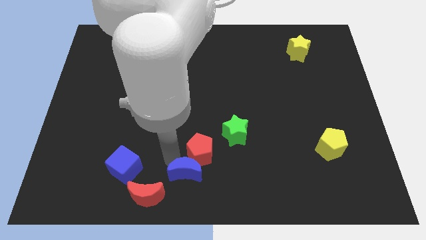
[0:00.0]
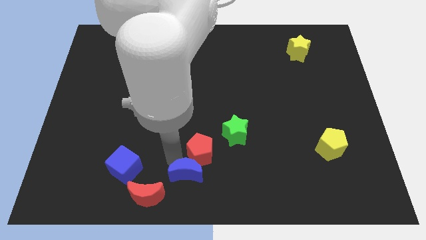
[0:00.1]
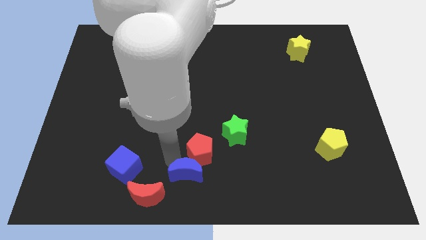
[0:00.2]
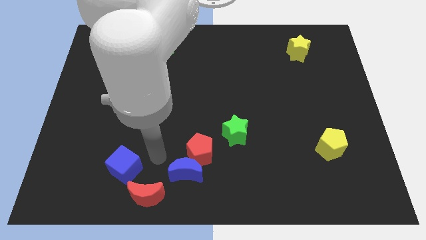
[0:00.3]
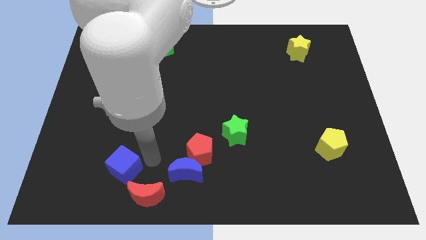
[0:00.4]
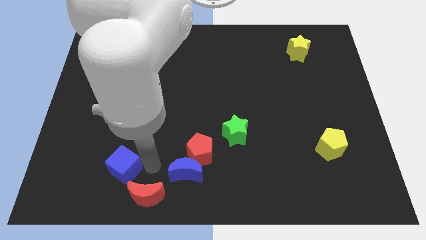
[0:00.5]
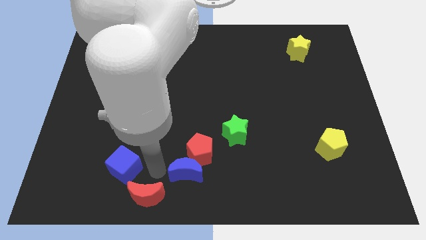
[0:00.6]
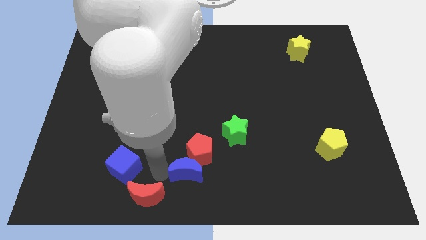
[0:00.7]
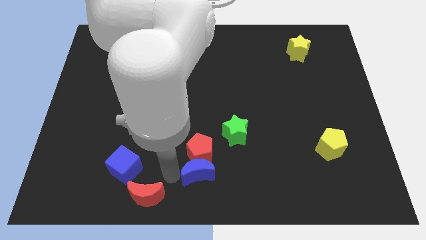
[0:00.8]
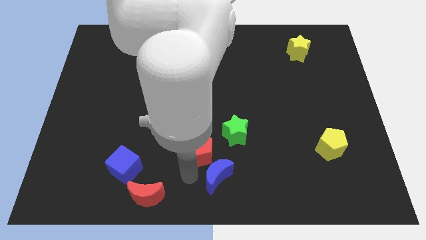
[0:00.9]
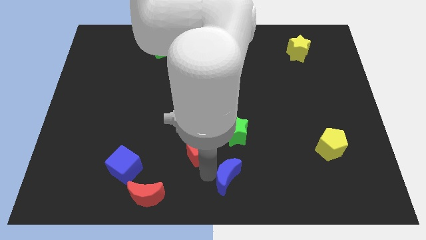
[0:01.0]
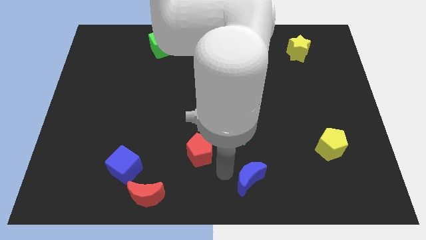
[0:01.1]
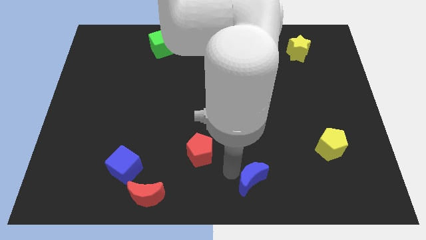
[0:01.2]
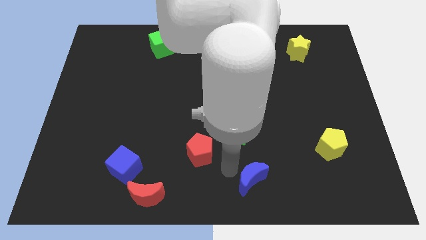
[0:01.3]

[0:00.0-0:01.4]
separate blue moon from red pentagon

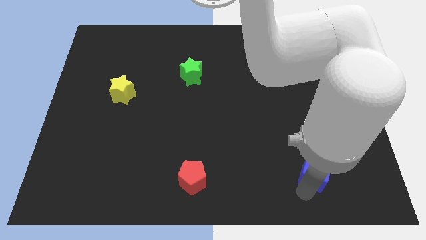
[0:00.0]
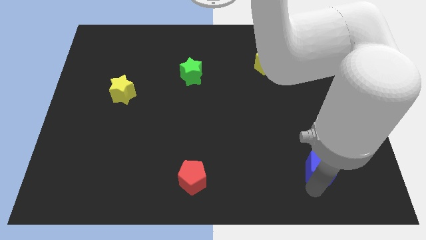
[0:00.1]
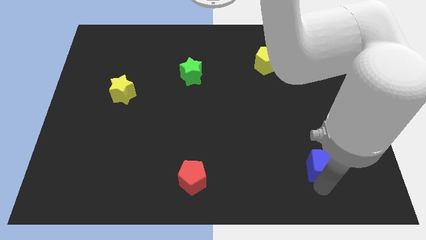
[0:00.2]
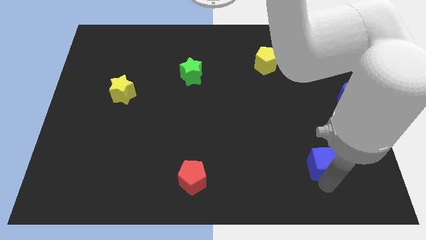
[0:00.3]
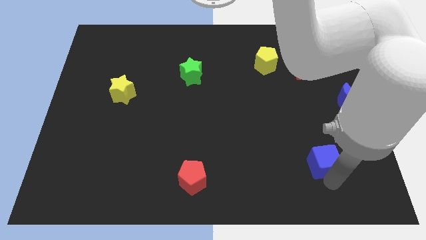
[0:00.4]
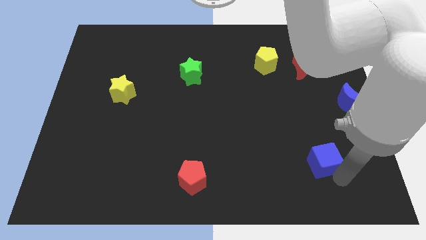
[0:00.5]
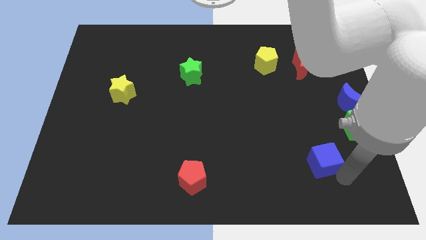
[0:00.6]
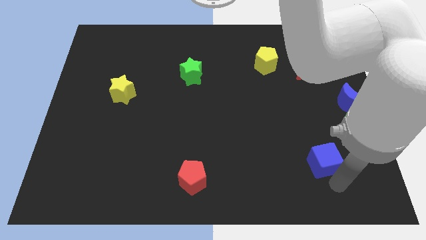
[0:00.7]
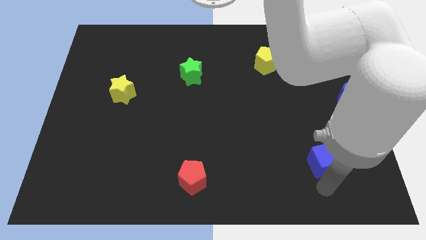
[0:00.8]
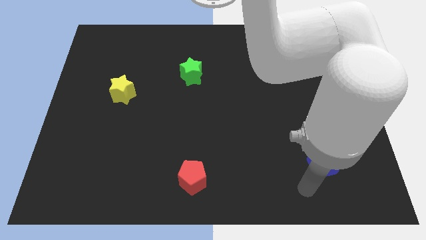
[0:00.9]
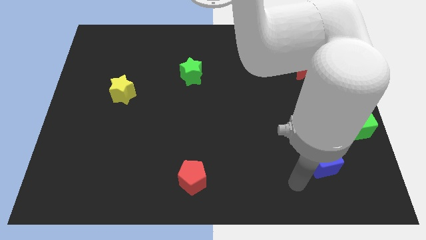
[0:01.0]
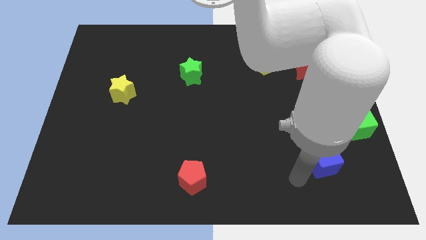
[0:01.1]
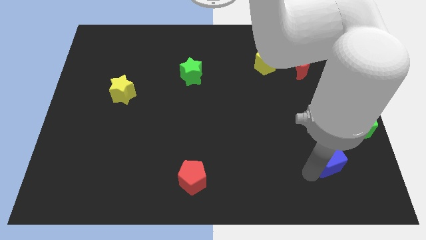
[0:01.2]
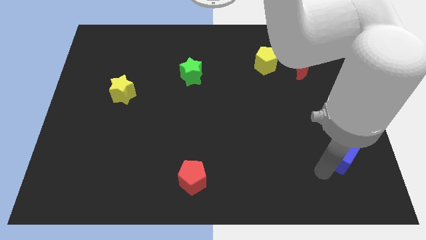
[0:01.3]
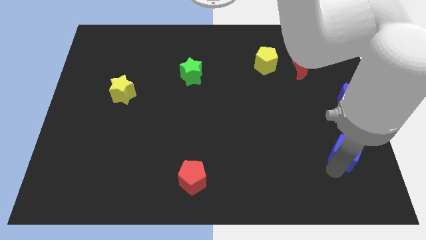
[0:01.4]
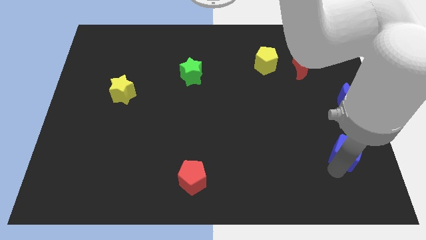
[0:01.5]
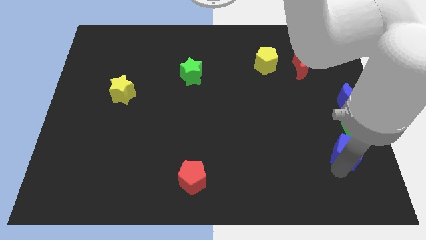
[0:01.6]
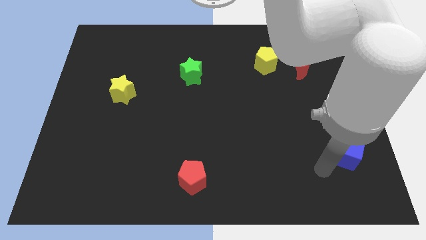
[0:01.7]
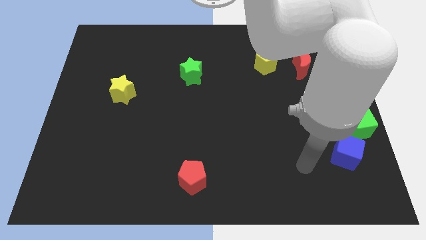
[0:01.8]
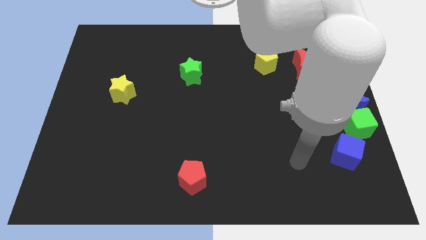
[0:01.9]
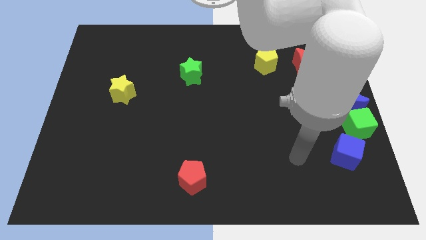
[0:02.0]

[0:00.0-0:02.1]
push blue cube towards green cube

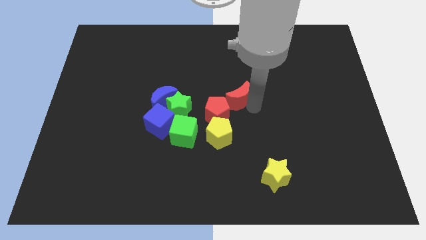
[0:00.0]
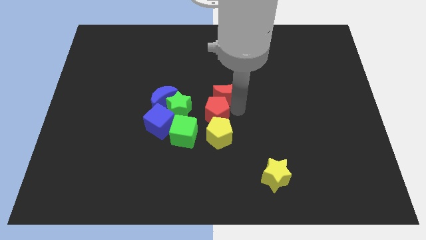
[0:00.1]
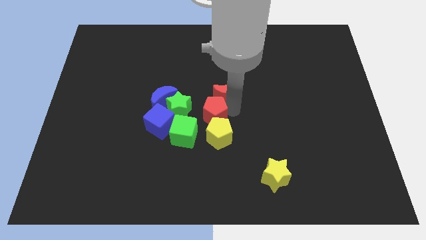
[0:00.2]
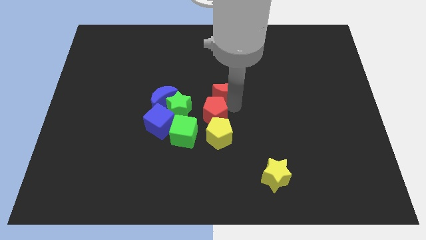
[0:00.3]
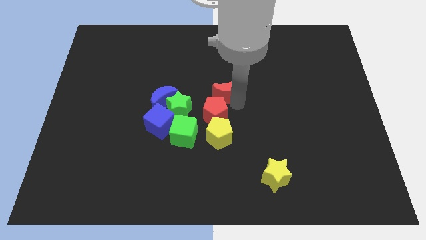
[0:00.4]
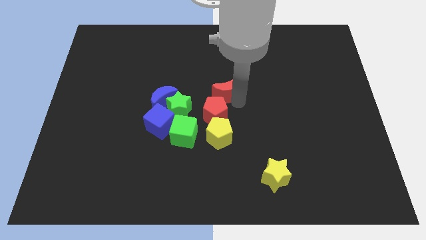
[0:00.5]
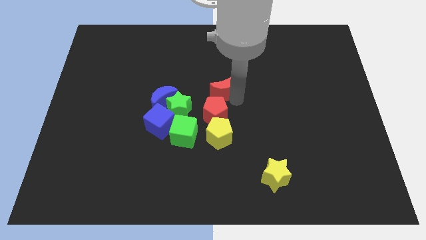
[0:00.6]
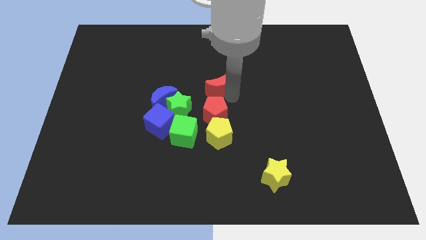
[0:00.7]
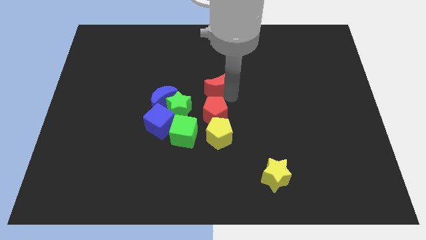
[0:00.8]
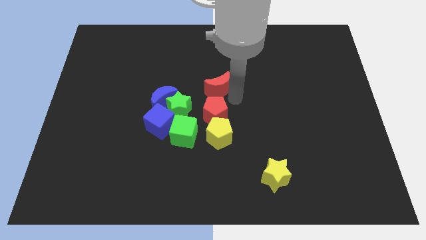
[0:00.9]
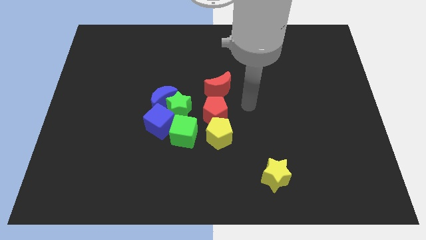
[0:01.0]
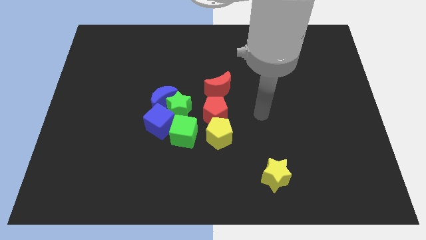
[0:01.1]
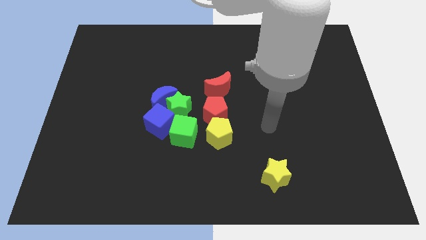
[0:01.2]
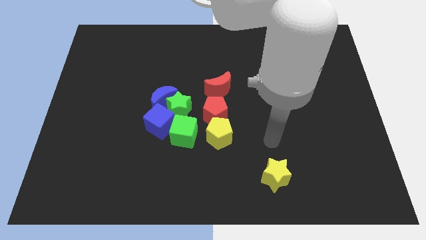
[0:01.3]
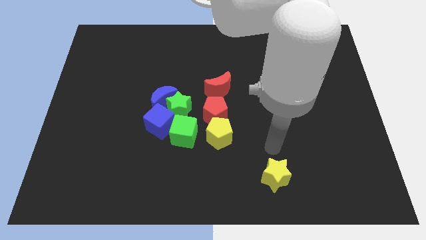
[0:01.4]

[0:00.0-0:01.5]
place the red moon at the center of the board

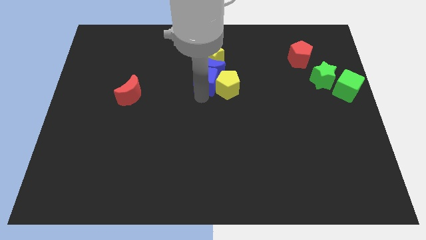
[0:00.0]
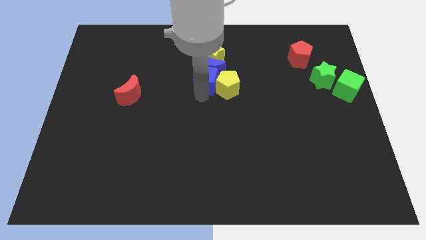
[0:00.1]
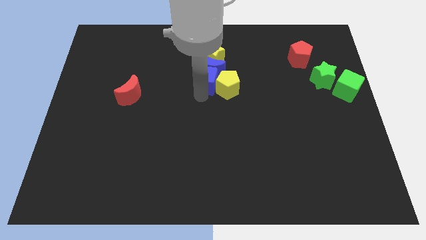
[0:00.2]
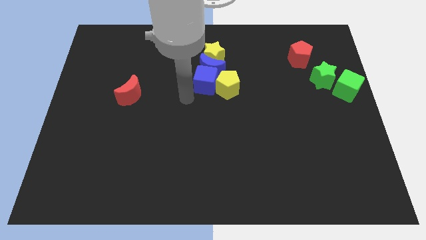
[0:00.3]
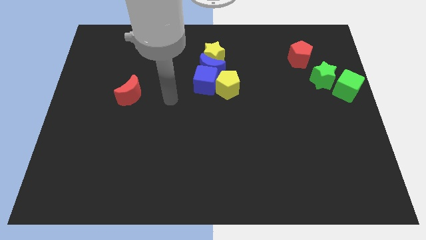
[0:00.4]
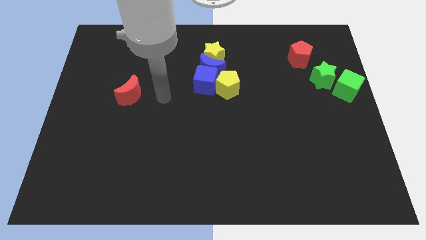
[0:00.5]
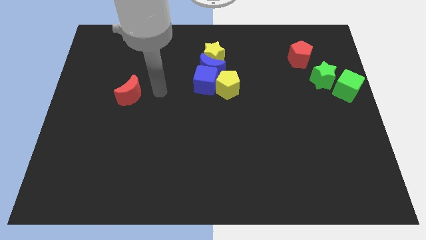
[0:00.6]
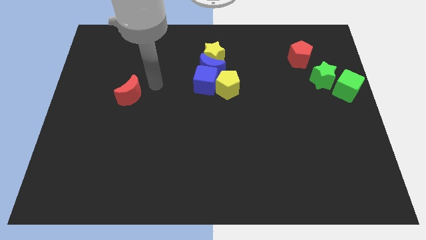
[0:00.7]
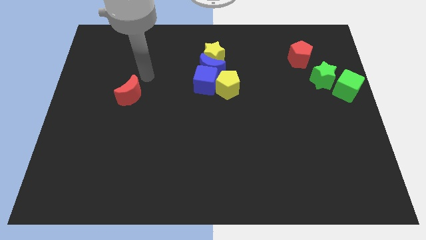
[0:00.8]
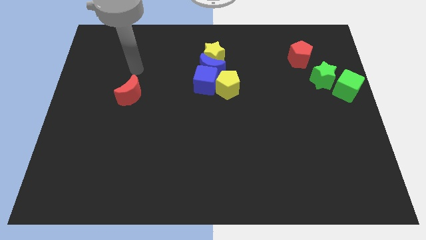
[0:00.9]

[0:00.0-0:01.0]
place your arm on top of the red moon

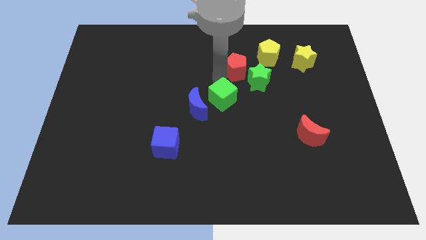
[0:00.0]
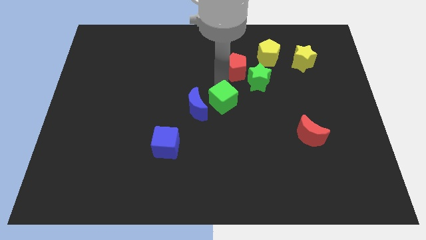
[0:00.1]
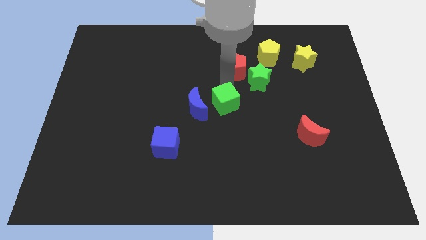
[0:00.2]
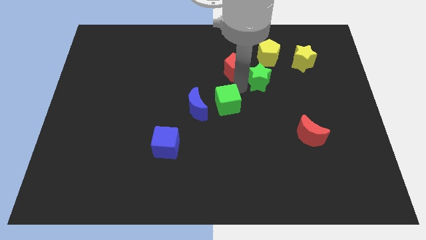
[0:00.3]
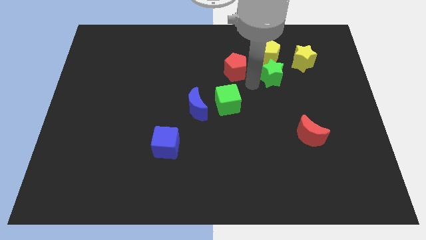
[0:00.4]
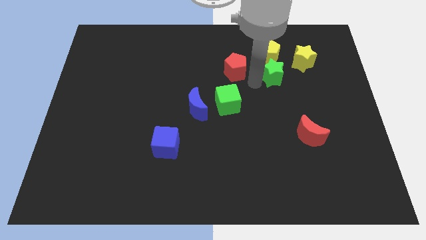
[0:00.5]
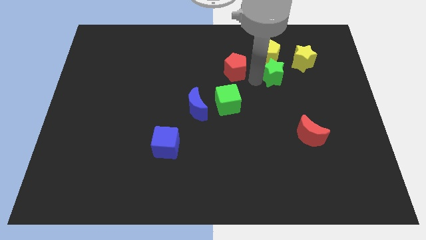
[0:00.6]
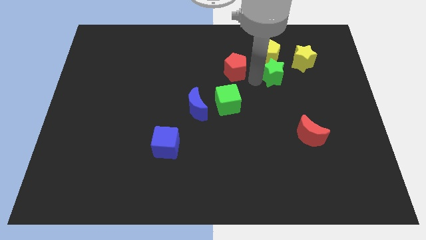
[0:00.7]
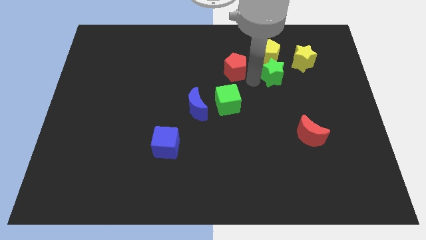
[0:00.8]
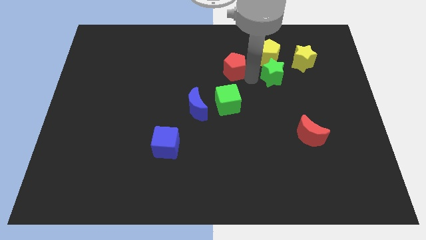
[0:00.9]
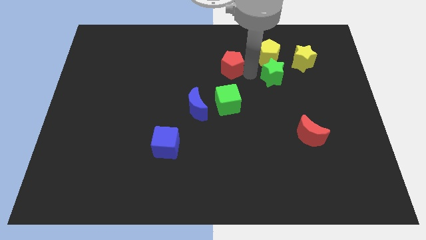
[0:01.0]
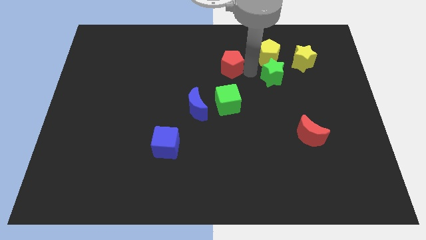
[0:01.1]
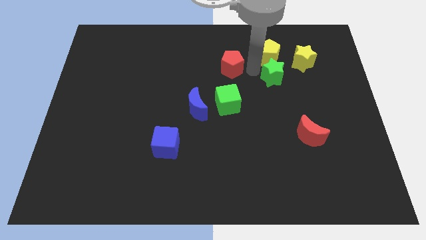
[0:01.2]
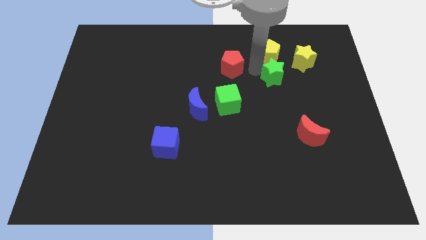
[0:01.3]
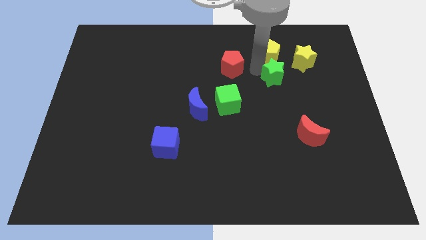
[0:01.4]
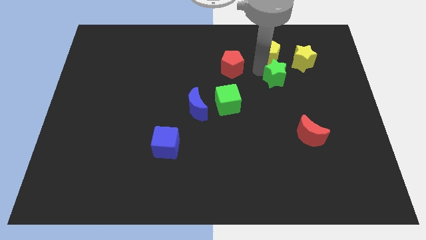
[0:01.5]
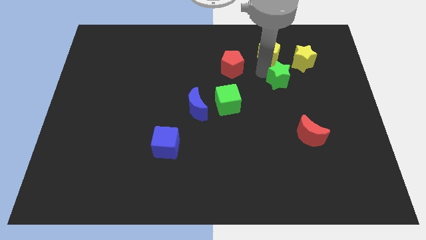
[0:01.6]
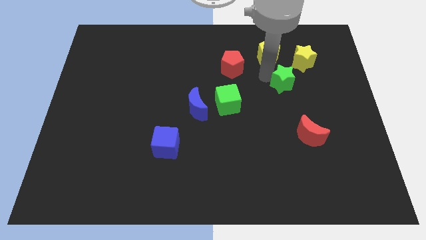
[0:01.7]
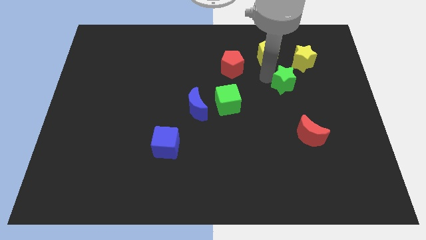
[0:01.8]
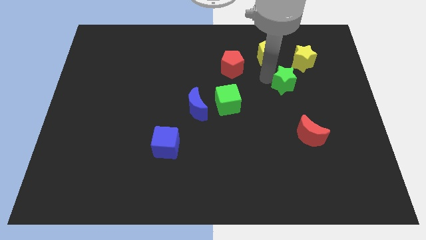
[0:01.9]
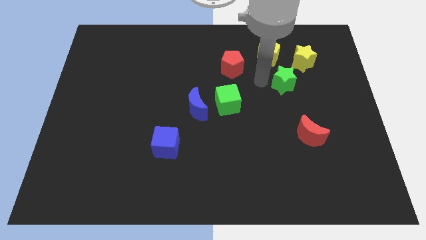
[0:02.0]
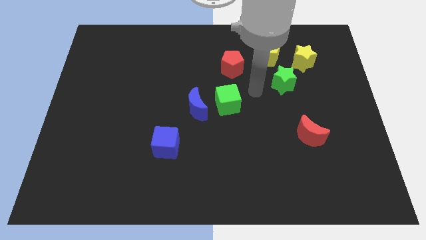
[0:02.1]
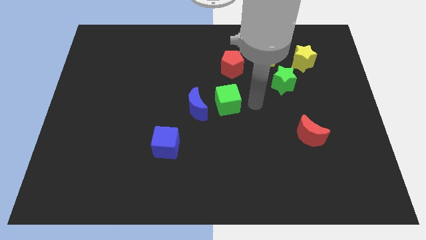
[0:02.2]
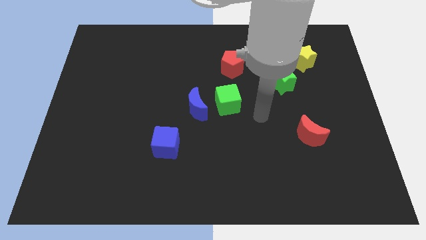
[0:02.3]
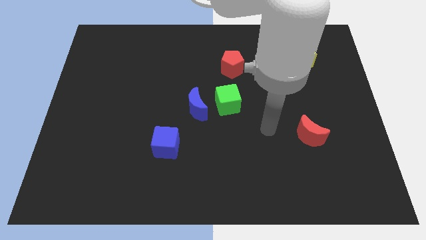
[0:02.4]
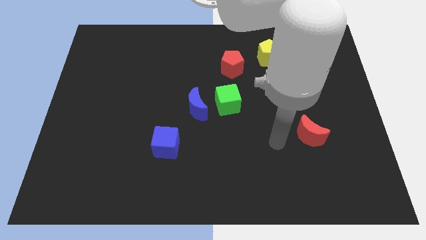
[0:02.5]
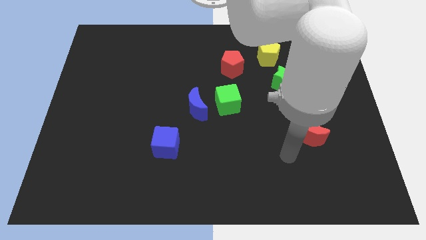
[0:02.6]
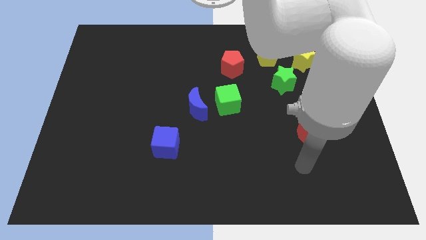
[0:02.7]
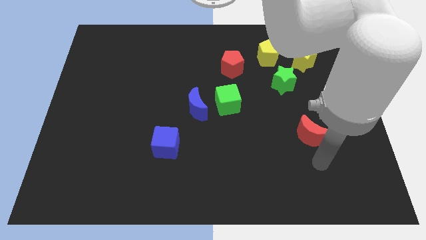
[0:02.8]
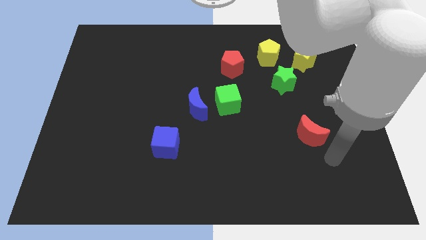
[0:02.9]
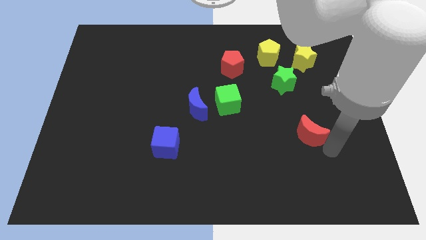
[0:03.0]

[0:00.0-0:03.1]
move the arm towards the bottom right side of the red pentagon
